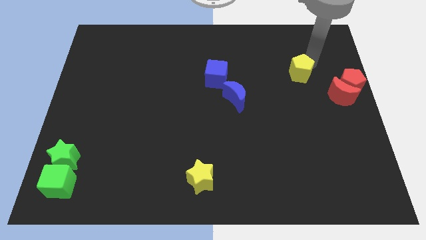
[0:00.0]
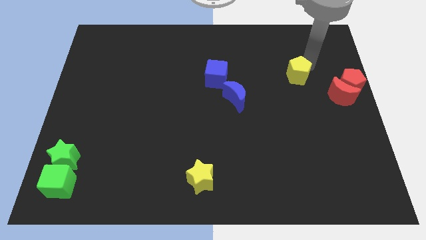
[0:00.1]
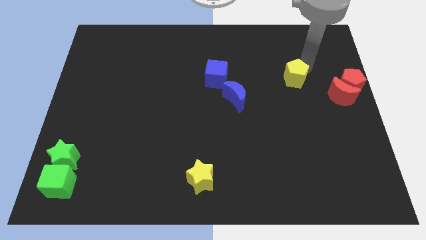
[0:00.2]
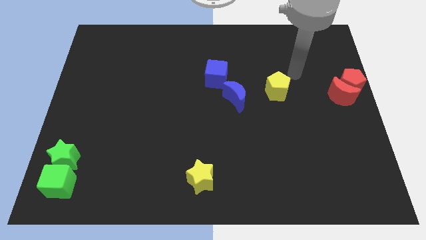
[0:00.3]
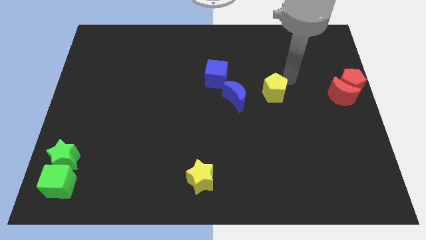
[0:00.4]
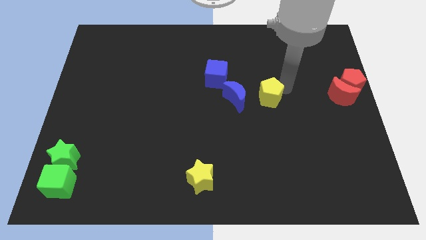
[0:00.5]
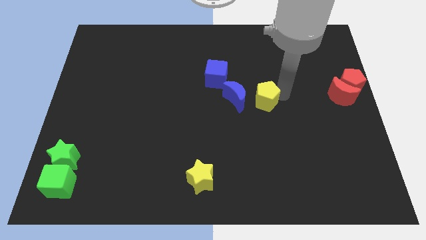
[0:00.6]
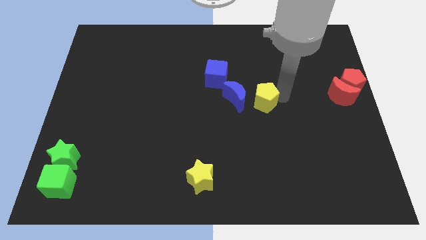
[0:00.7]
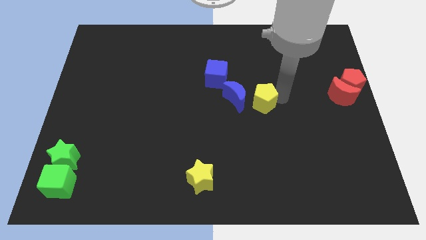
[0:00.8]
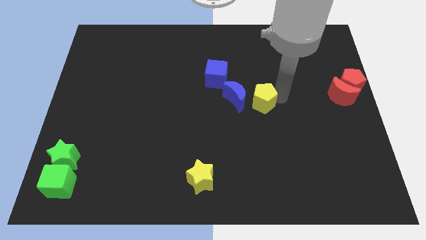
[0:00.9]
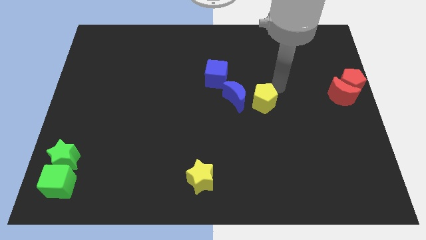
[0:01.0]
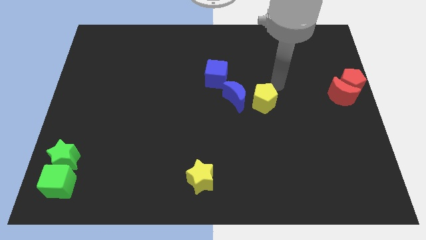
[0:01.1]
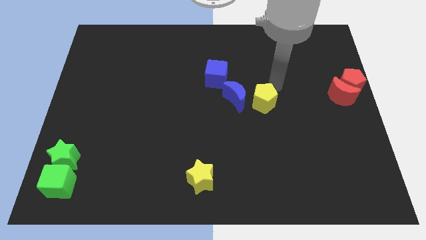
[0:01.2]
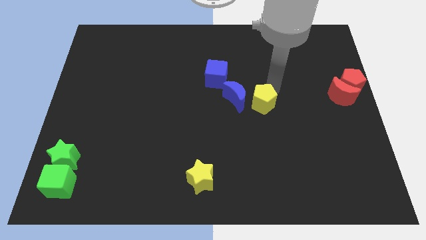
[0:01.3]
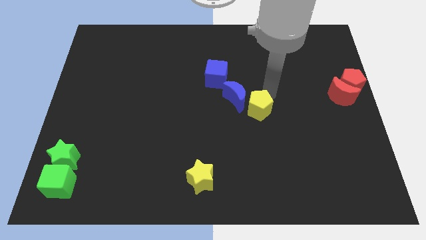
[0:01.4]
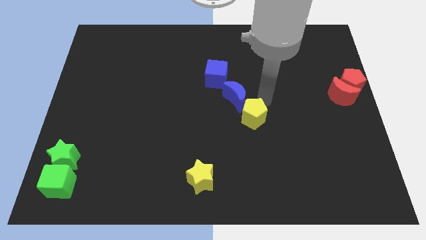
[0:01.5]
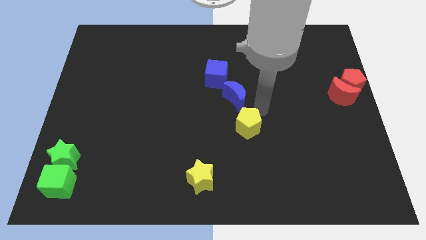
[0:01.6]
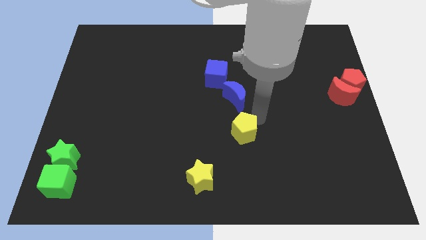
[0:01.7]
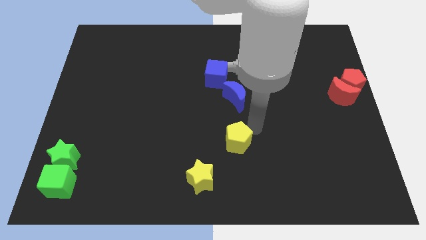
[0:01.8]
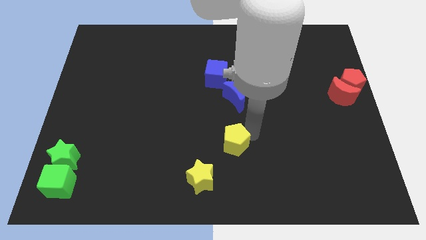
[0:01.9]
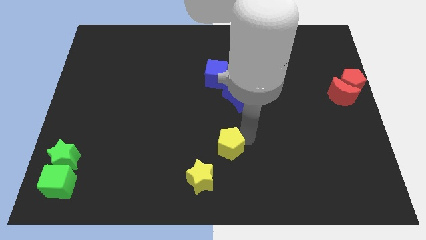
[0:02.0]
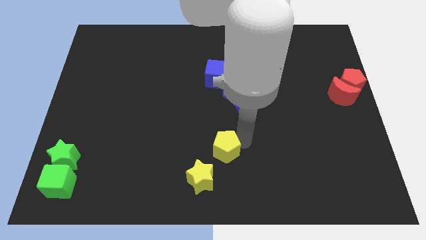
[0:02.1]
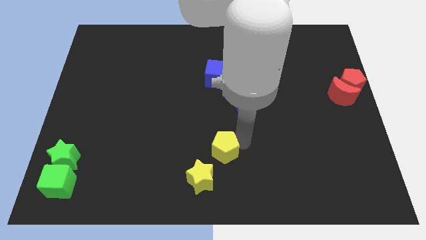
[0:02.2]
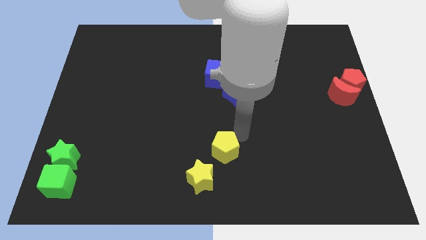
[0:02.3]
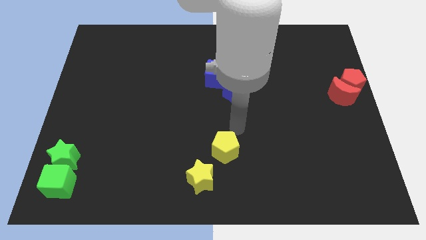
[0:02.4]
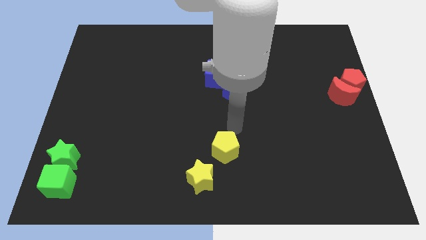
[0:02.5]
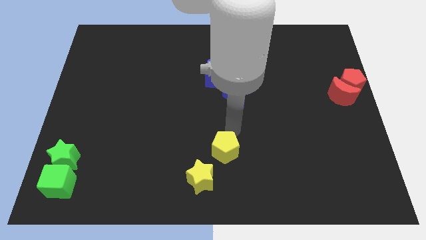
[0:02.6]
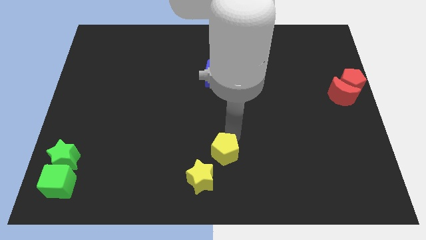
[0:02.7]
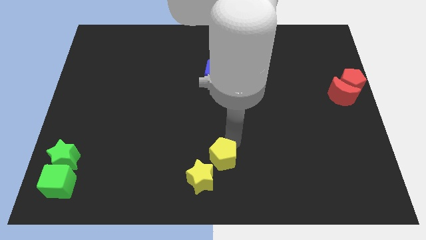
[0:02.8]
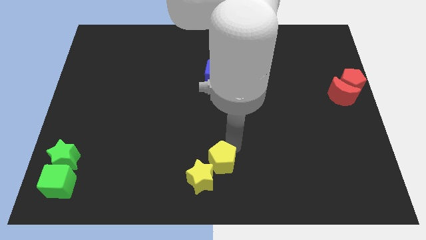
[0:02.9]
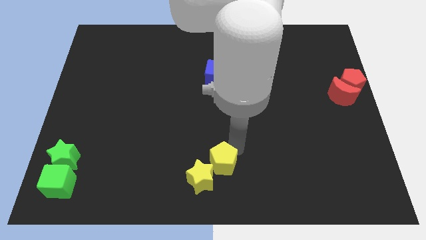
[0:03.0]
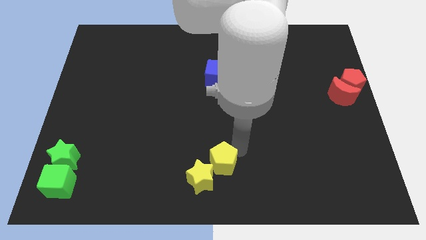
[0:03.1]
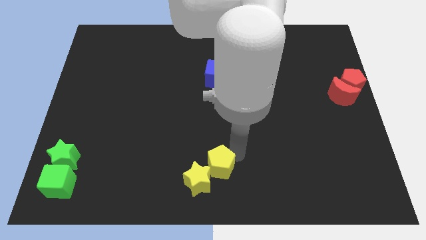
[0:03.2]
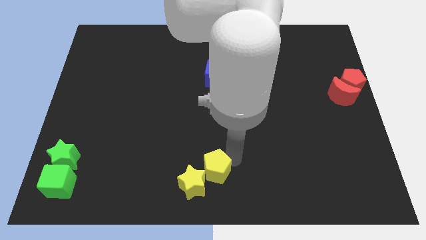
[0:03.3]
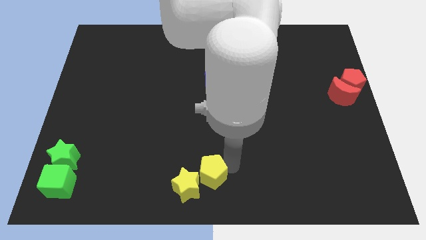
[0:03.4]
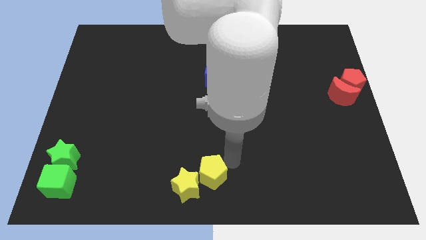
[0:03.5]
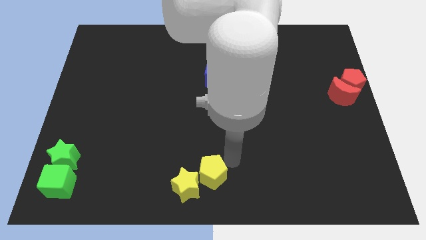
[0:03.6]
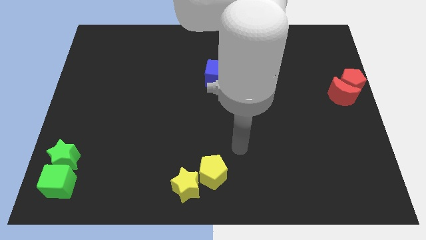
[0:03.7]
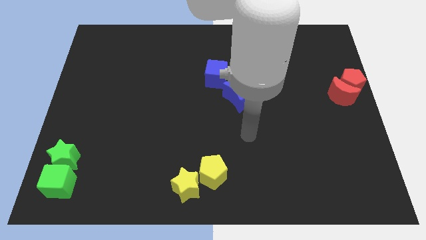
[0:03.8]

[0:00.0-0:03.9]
push the yellow pentagon into yellow star

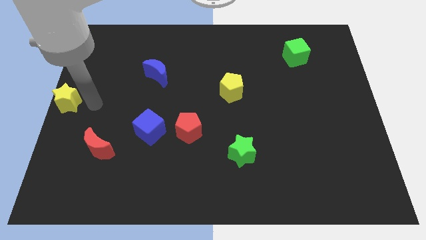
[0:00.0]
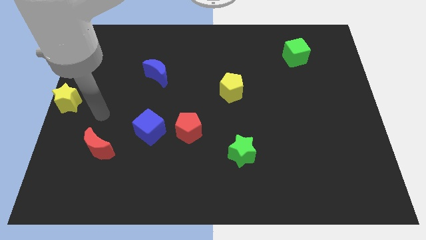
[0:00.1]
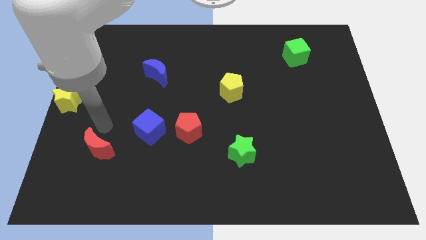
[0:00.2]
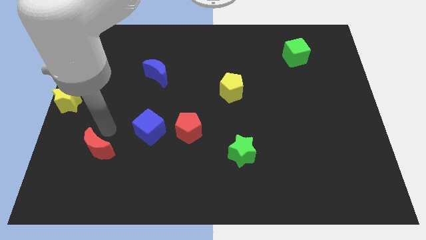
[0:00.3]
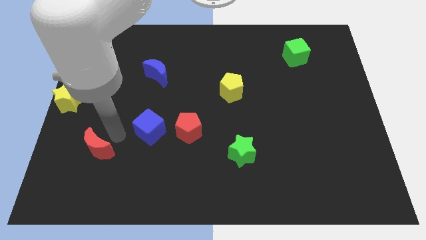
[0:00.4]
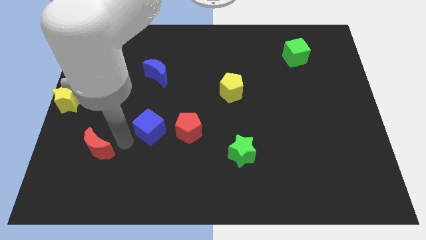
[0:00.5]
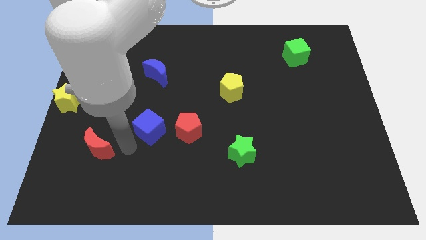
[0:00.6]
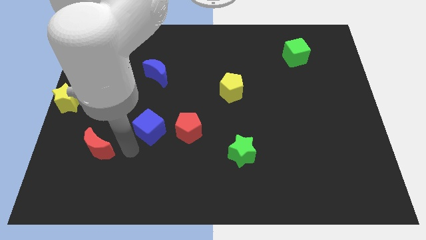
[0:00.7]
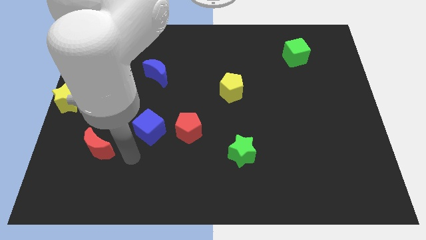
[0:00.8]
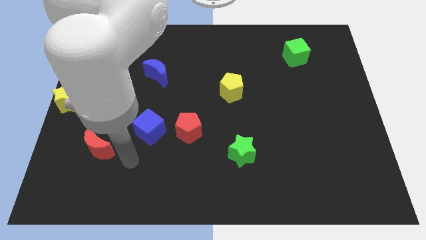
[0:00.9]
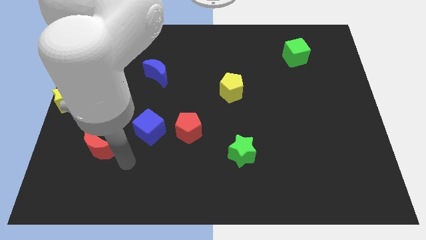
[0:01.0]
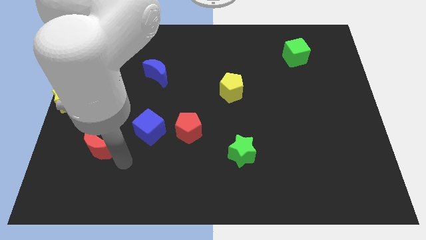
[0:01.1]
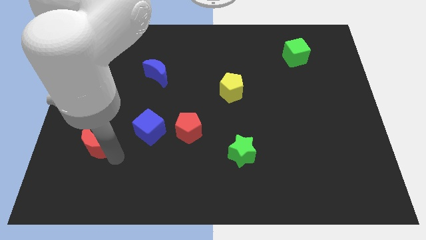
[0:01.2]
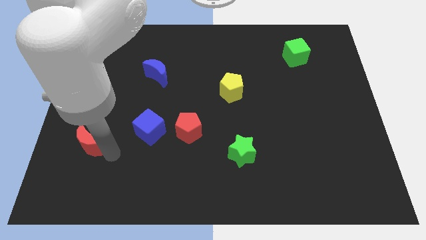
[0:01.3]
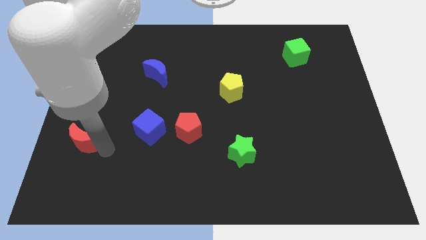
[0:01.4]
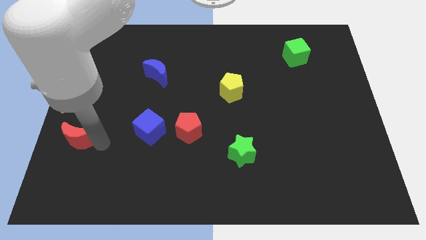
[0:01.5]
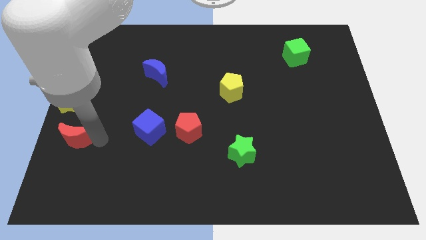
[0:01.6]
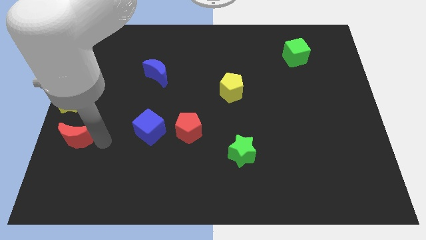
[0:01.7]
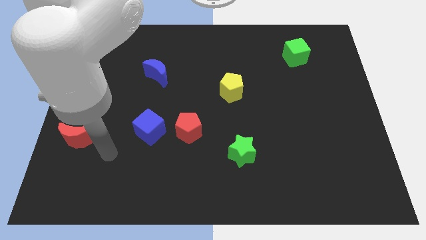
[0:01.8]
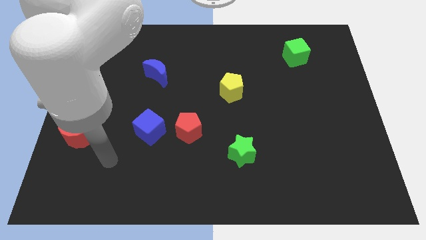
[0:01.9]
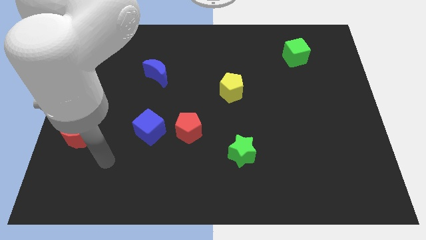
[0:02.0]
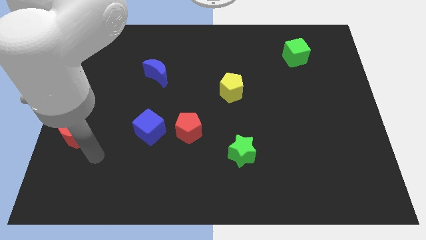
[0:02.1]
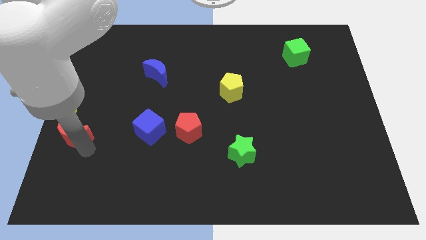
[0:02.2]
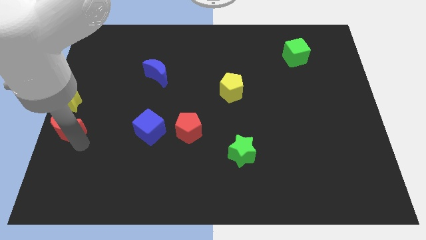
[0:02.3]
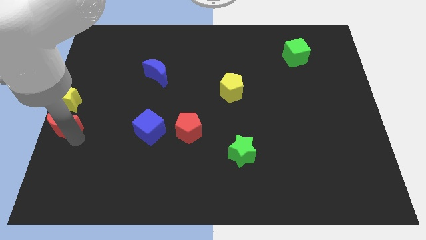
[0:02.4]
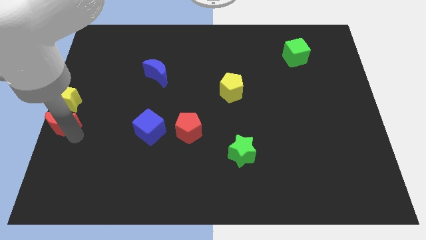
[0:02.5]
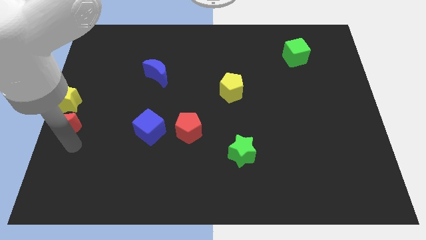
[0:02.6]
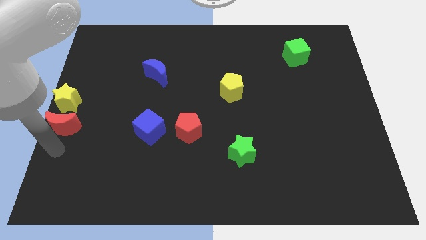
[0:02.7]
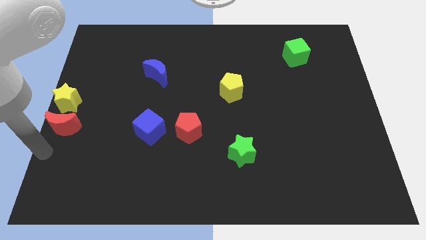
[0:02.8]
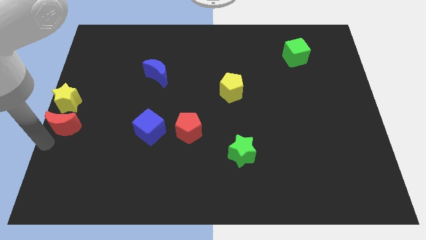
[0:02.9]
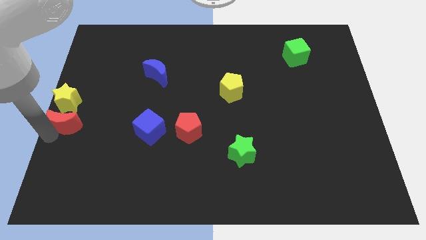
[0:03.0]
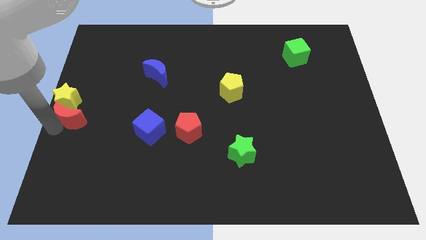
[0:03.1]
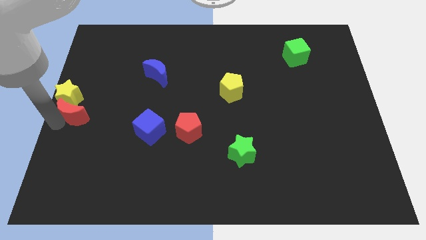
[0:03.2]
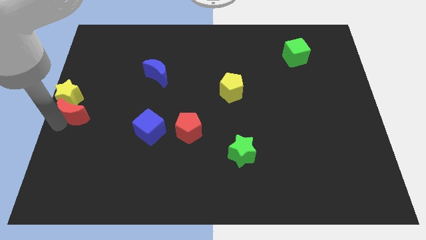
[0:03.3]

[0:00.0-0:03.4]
drag the red moon below the yellow star

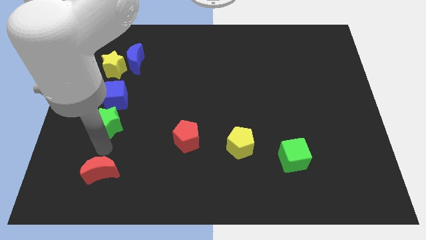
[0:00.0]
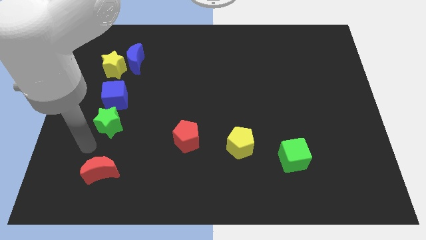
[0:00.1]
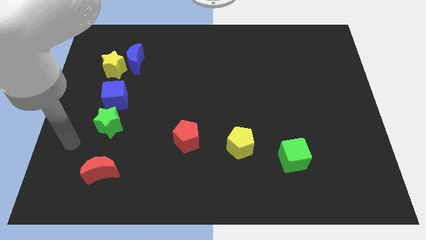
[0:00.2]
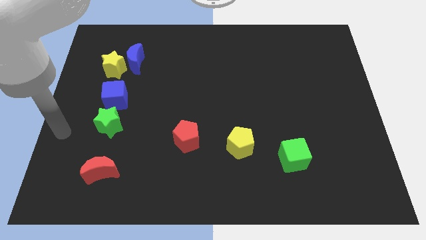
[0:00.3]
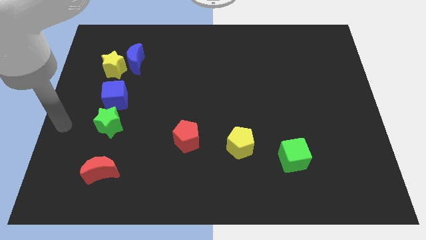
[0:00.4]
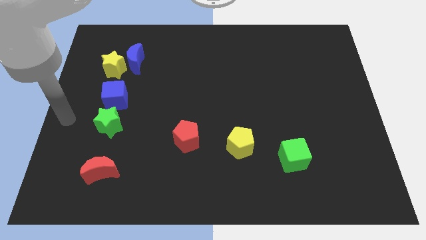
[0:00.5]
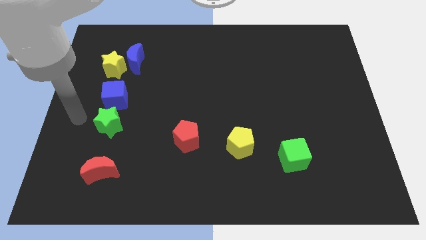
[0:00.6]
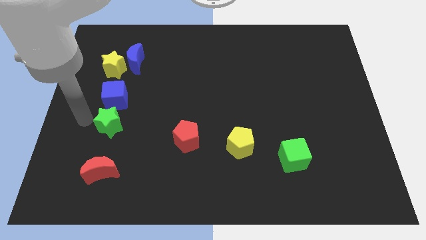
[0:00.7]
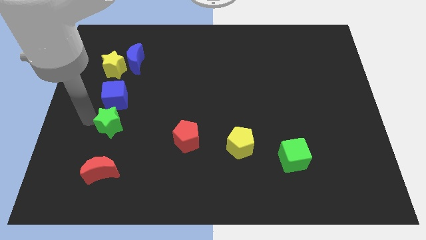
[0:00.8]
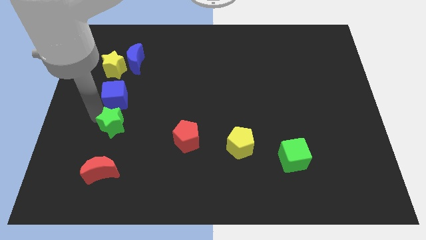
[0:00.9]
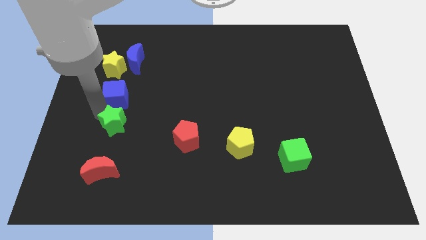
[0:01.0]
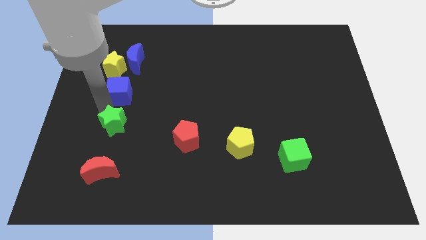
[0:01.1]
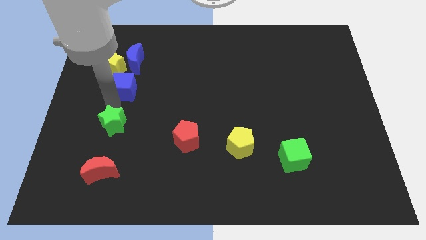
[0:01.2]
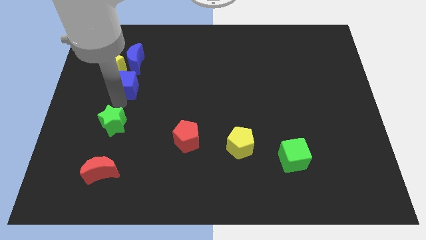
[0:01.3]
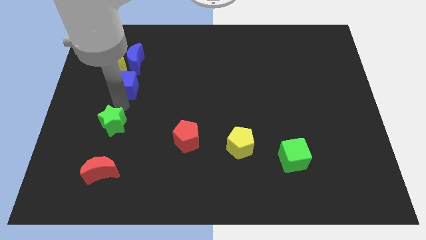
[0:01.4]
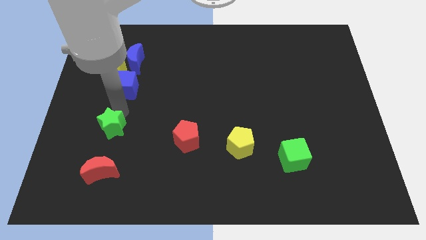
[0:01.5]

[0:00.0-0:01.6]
separate the blue cube and green star to each other
